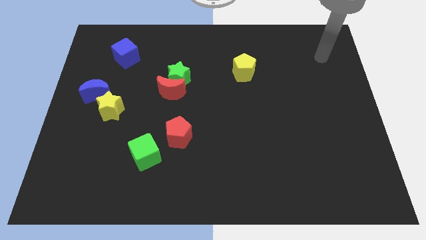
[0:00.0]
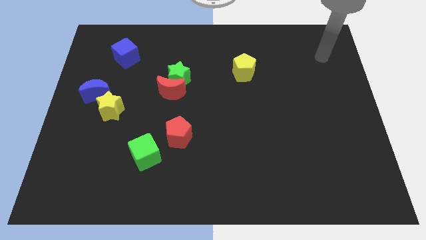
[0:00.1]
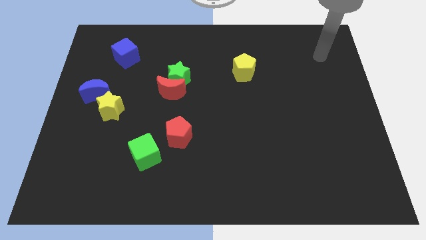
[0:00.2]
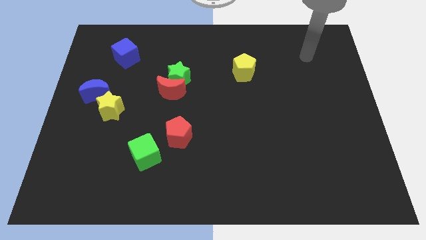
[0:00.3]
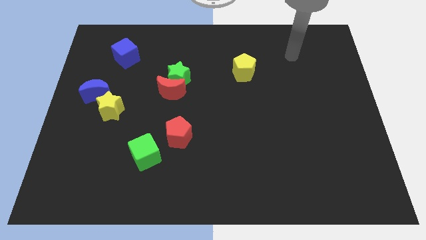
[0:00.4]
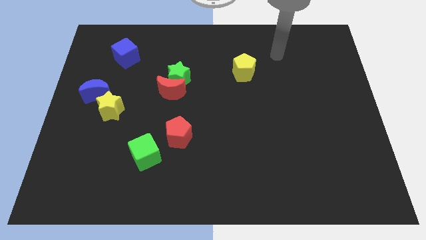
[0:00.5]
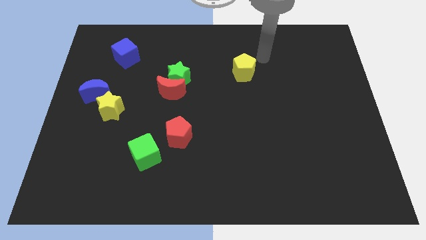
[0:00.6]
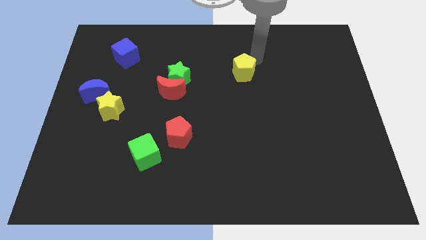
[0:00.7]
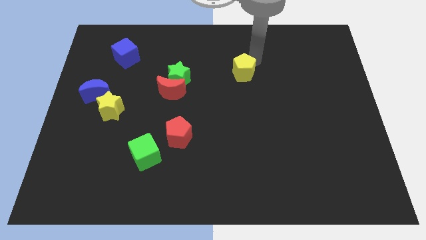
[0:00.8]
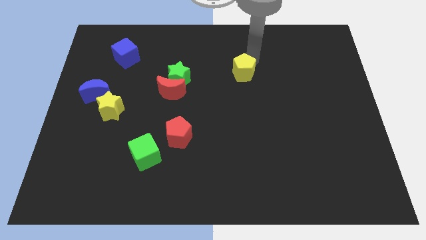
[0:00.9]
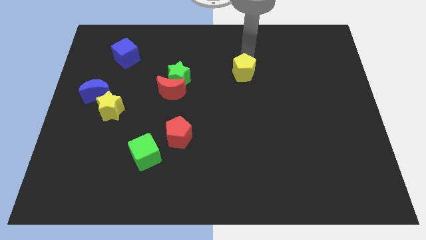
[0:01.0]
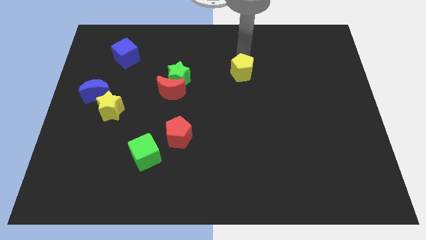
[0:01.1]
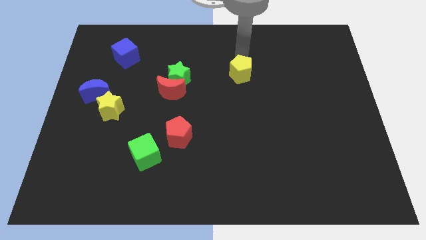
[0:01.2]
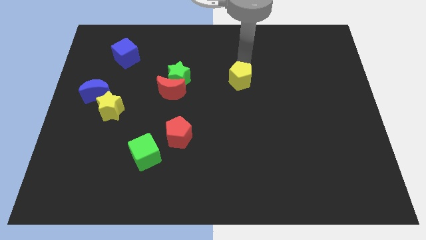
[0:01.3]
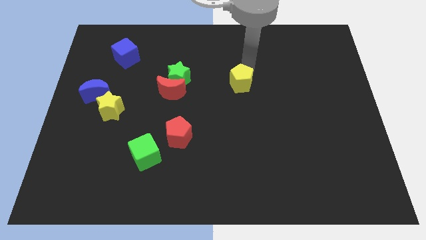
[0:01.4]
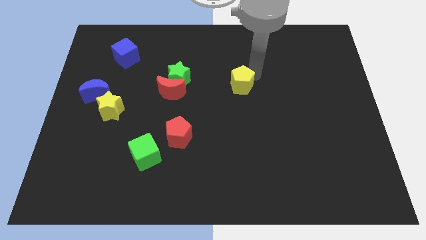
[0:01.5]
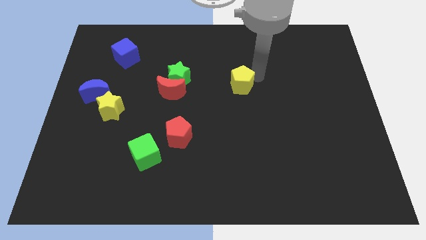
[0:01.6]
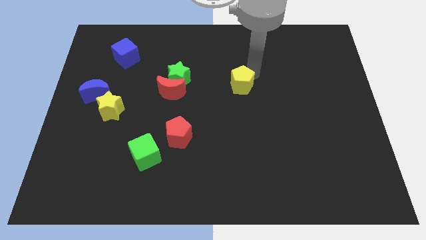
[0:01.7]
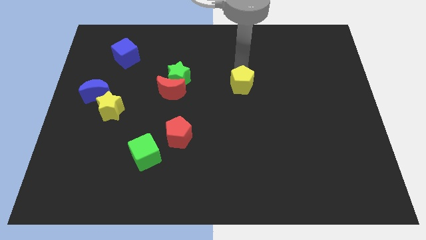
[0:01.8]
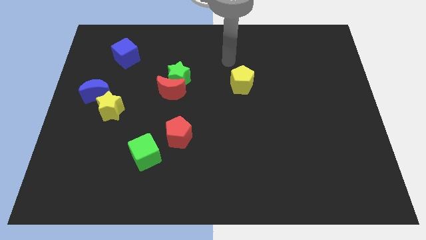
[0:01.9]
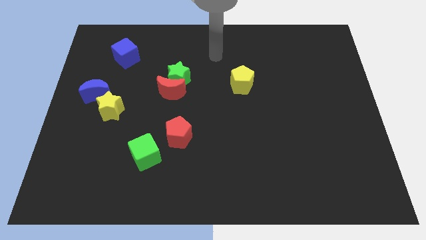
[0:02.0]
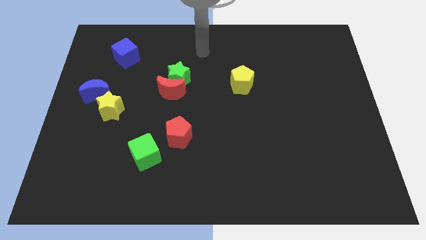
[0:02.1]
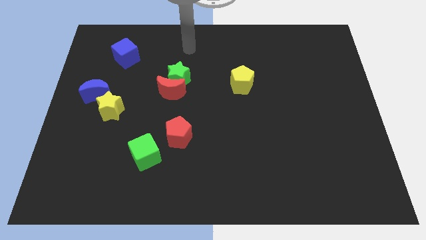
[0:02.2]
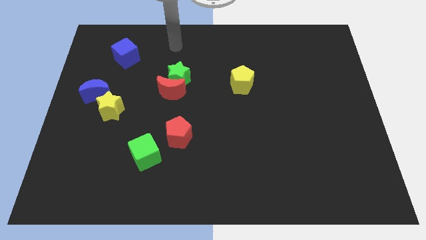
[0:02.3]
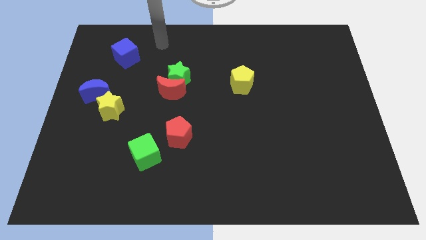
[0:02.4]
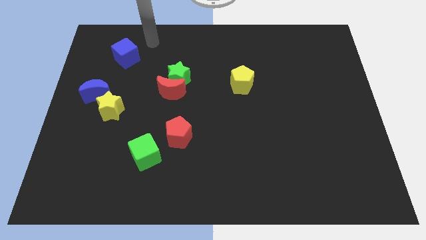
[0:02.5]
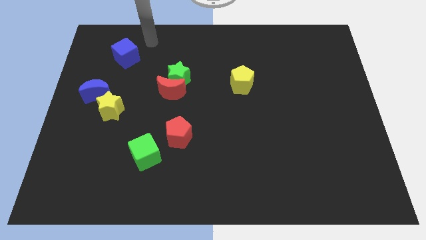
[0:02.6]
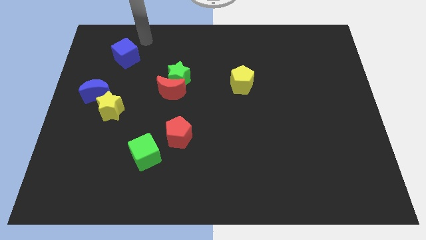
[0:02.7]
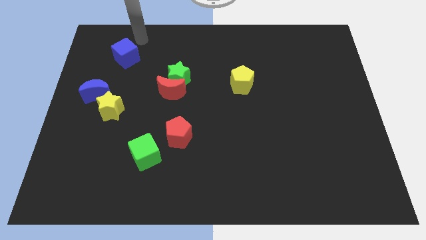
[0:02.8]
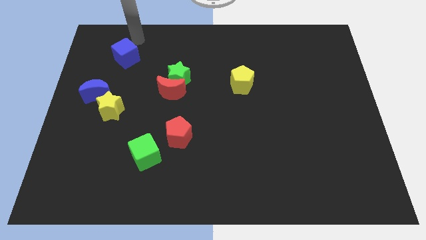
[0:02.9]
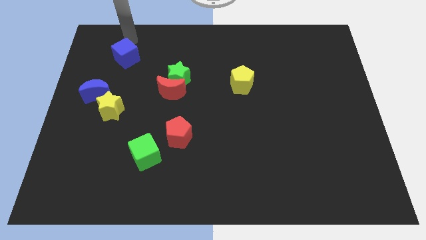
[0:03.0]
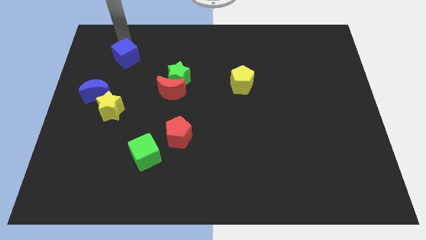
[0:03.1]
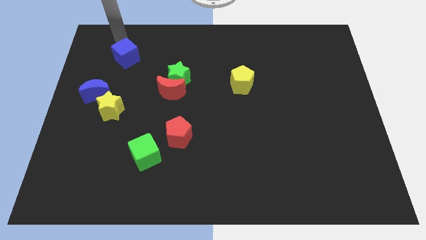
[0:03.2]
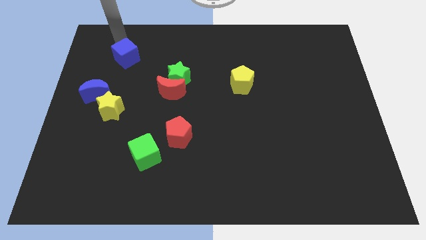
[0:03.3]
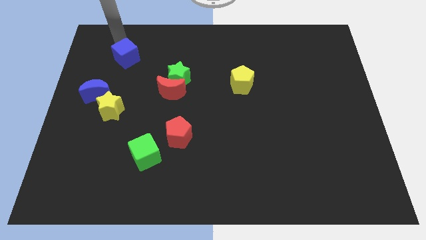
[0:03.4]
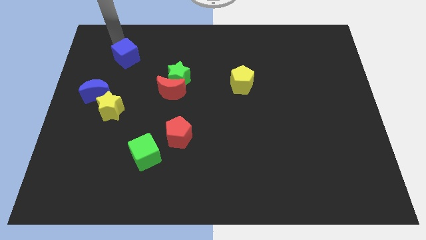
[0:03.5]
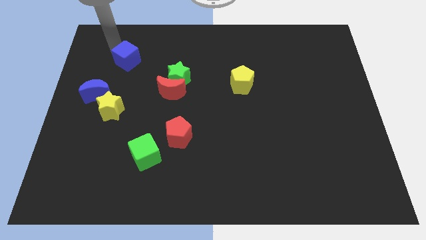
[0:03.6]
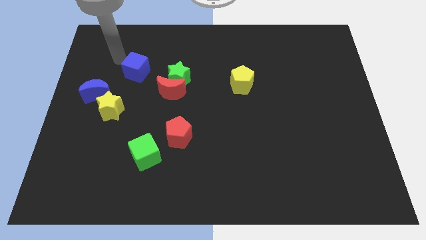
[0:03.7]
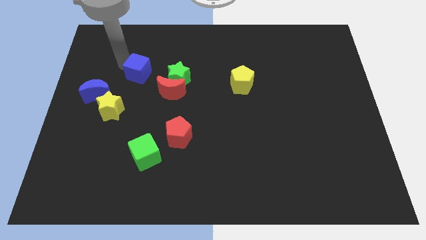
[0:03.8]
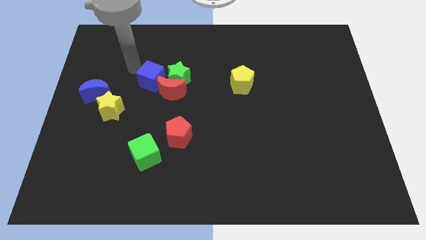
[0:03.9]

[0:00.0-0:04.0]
place the blue cube diagonally top right to the yellow star

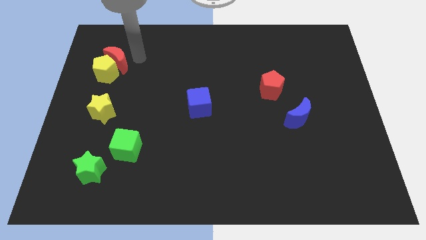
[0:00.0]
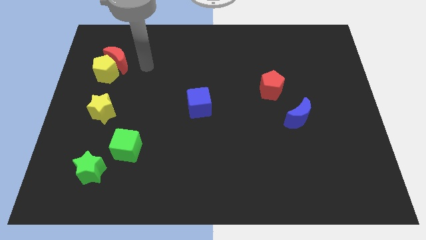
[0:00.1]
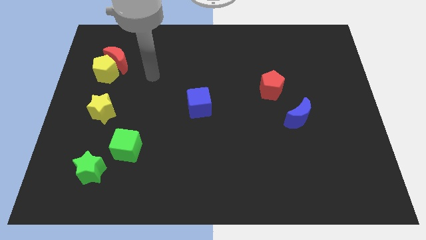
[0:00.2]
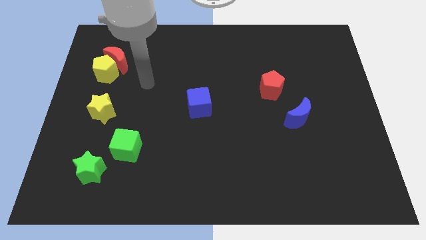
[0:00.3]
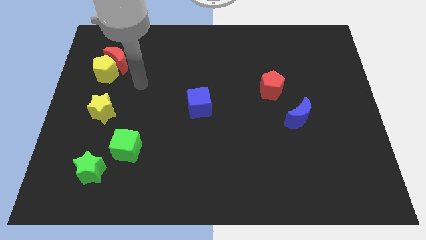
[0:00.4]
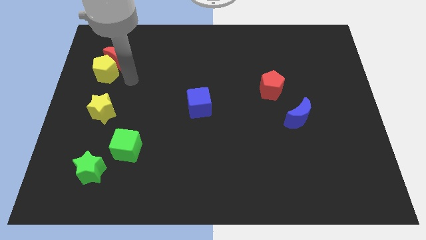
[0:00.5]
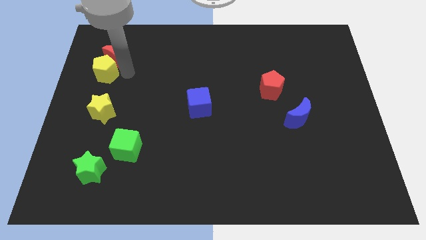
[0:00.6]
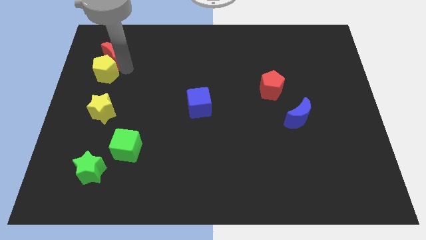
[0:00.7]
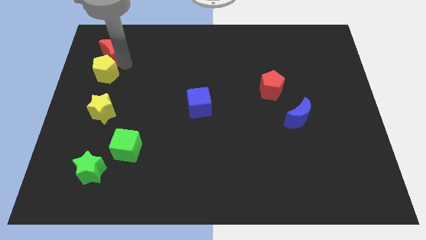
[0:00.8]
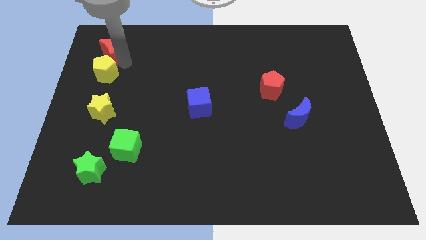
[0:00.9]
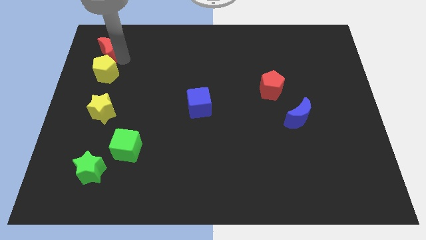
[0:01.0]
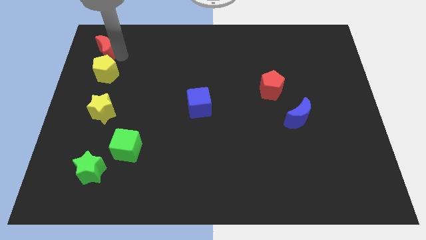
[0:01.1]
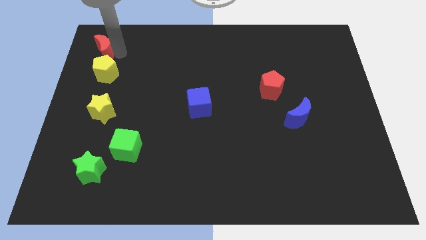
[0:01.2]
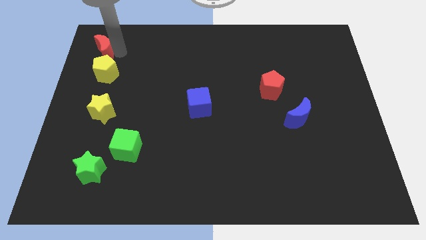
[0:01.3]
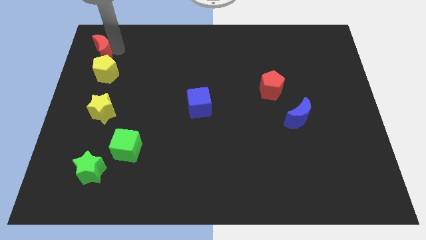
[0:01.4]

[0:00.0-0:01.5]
push the red crescent to the top of the yellow pentagon

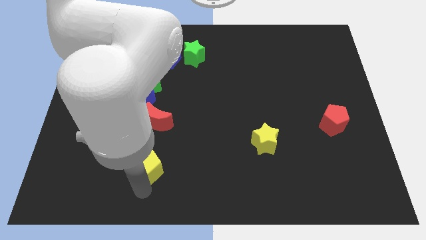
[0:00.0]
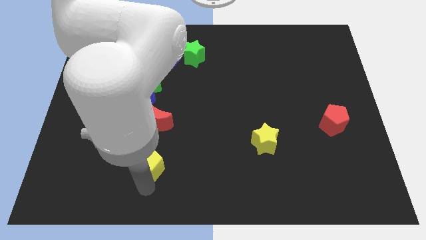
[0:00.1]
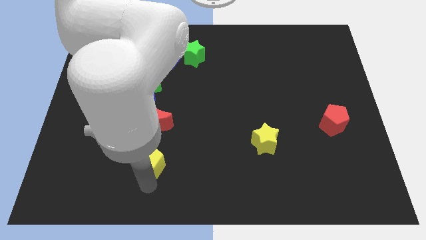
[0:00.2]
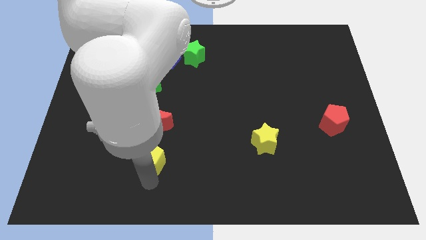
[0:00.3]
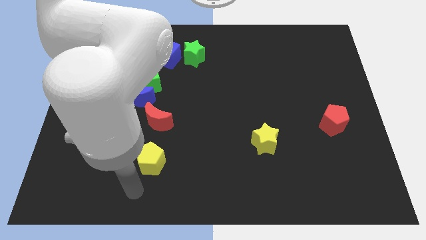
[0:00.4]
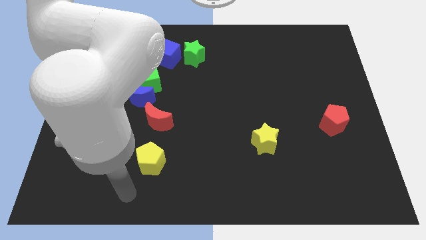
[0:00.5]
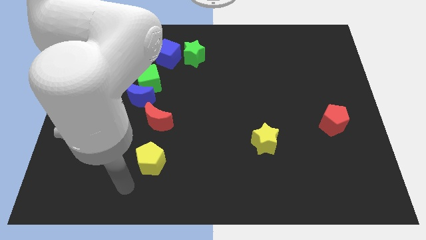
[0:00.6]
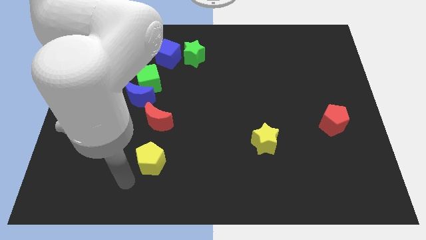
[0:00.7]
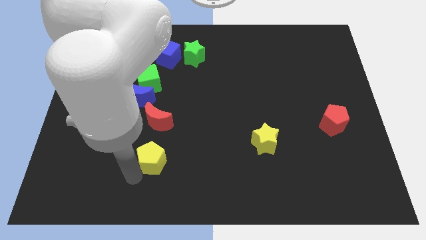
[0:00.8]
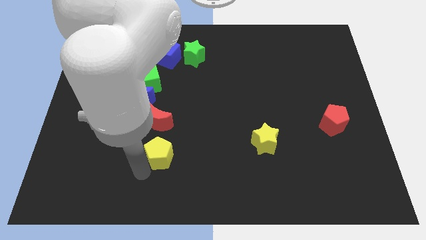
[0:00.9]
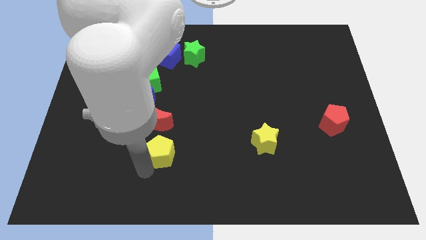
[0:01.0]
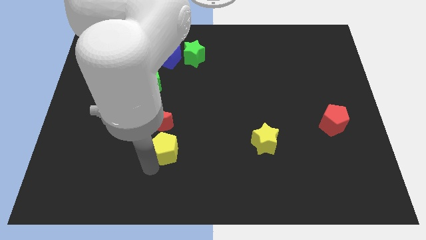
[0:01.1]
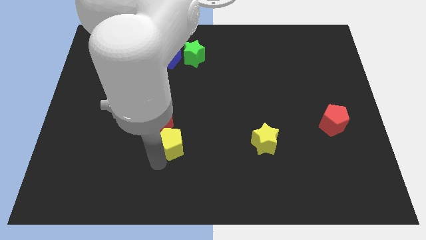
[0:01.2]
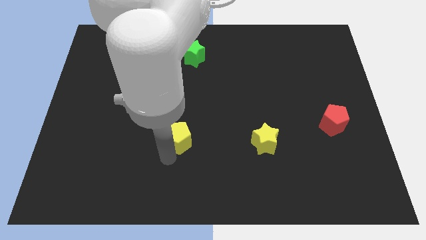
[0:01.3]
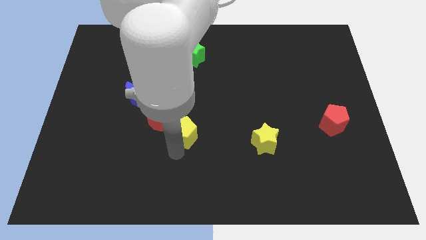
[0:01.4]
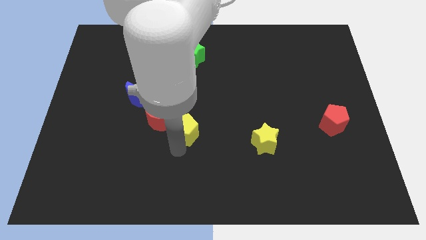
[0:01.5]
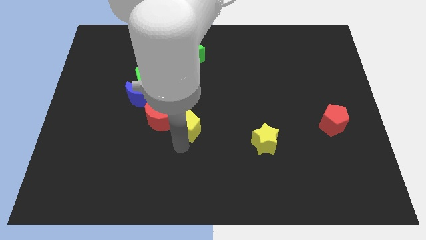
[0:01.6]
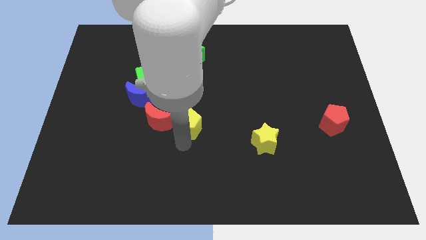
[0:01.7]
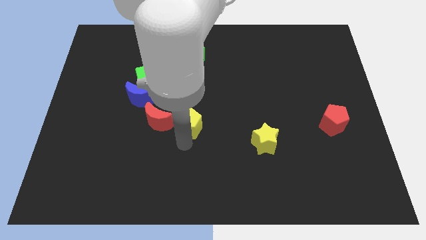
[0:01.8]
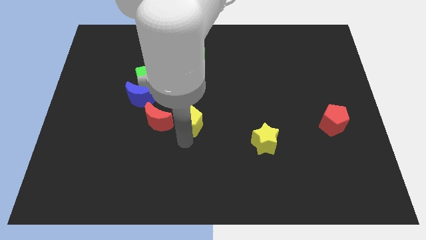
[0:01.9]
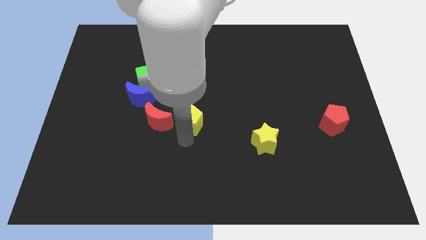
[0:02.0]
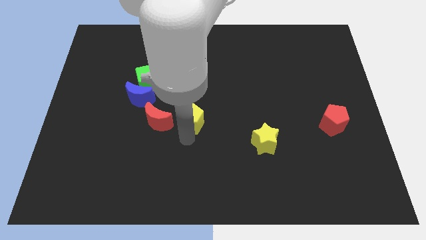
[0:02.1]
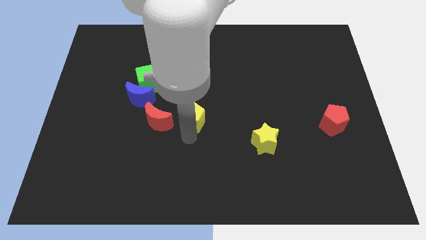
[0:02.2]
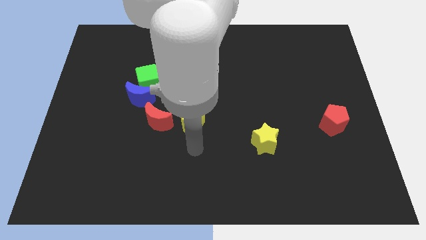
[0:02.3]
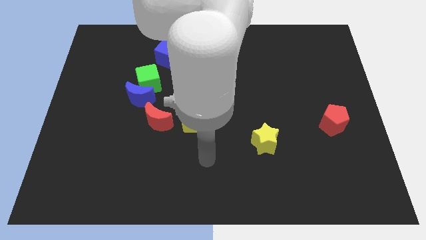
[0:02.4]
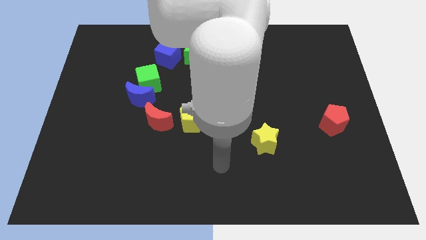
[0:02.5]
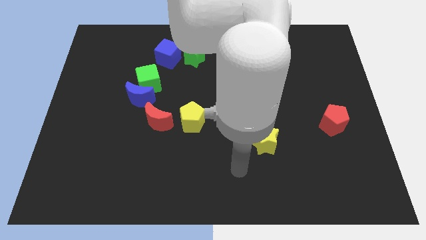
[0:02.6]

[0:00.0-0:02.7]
push the yellow pentagon to the right of the red crescent

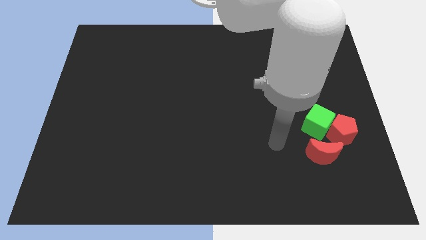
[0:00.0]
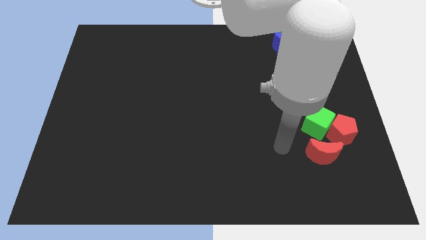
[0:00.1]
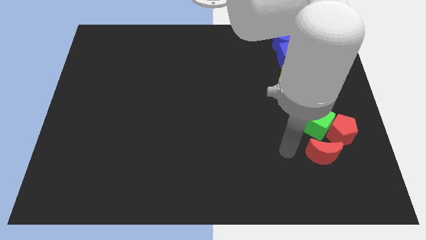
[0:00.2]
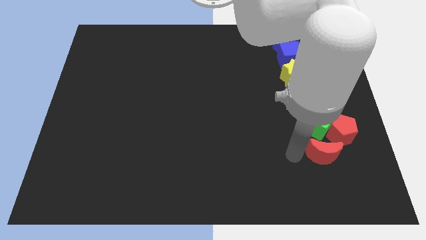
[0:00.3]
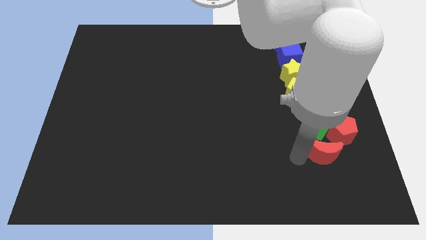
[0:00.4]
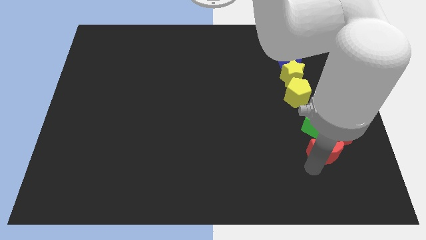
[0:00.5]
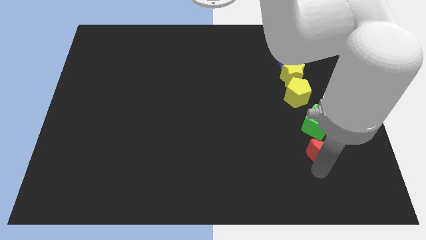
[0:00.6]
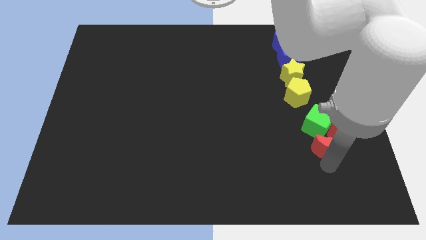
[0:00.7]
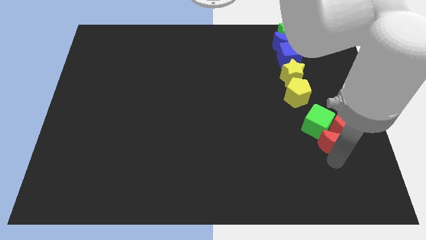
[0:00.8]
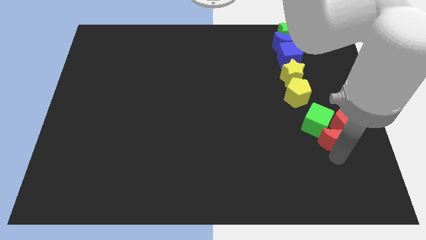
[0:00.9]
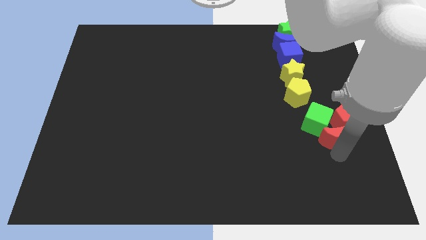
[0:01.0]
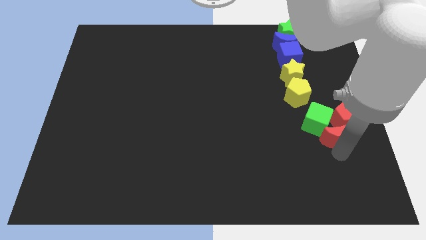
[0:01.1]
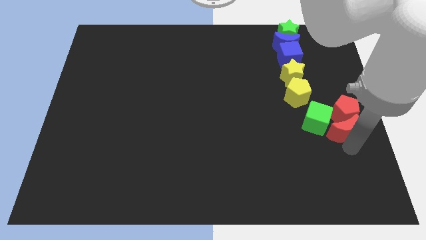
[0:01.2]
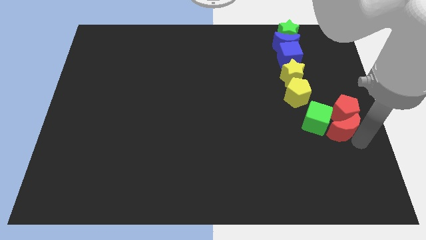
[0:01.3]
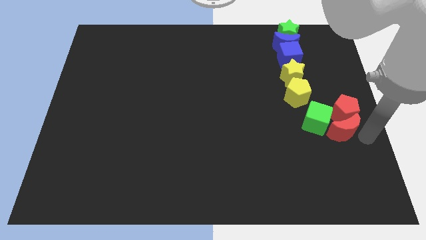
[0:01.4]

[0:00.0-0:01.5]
move the red blocks slightly up
